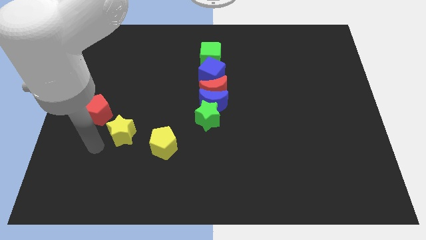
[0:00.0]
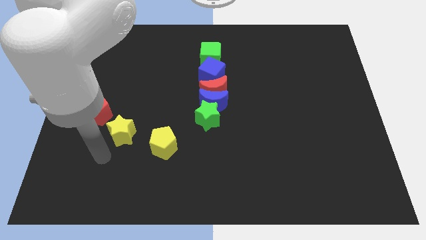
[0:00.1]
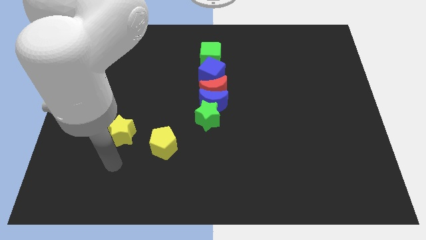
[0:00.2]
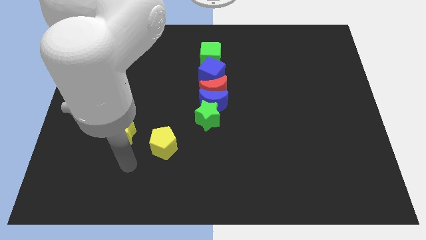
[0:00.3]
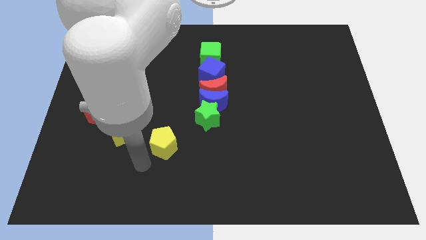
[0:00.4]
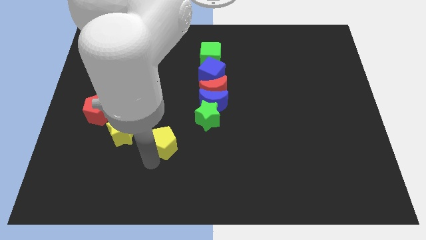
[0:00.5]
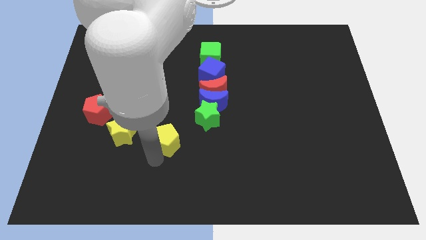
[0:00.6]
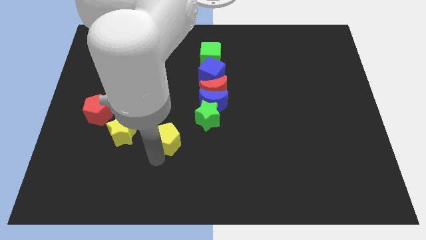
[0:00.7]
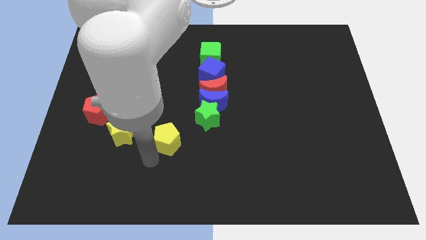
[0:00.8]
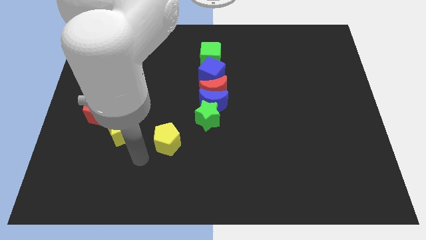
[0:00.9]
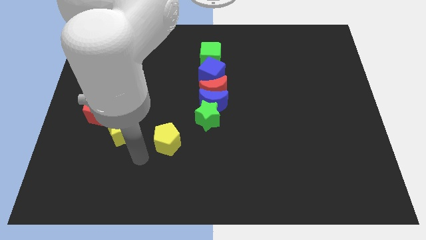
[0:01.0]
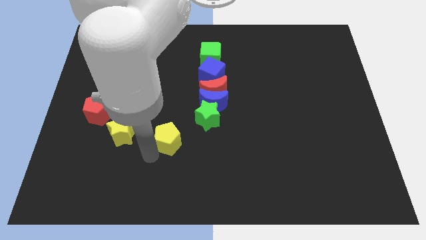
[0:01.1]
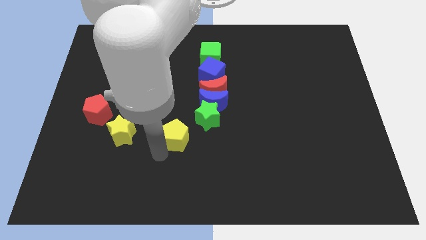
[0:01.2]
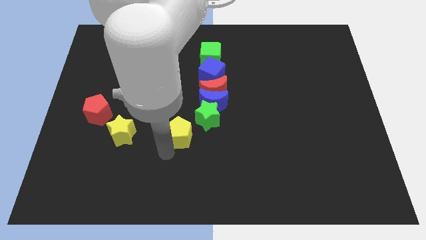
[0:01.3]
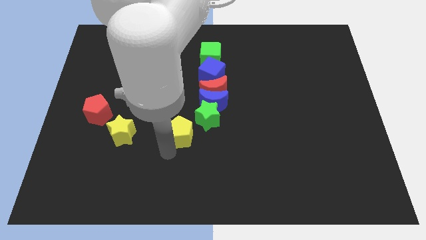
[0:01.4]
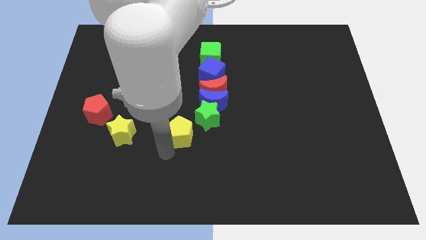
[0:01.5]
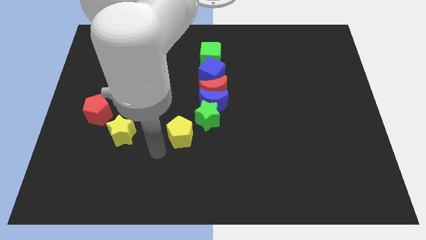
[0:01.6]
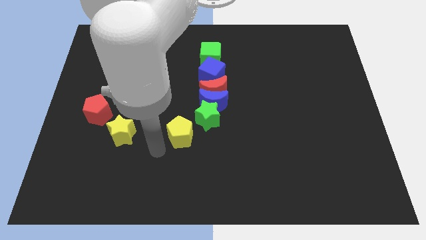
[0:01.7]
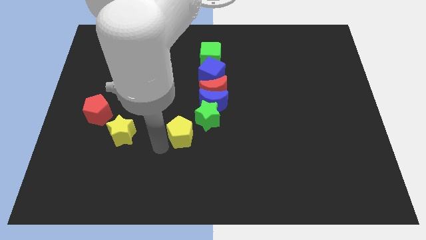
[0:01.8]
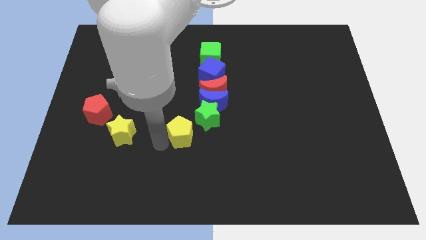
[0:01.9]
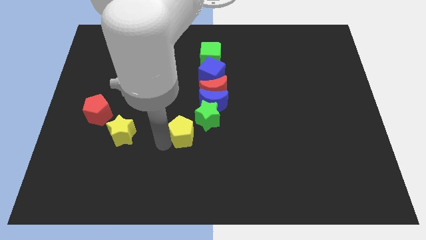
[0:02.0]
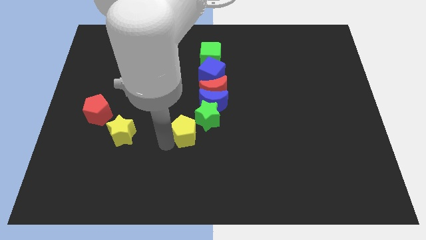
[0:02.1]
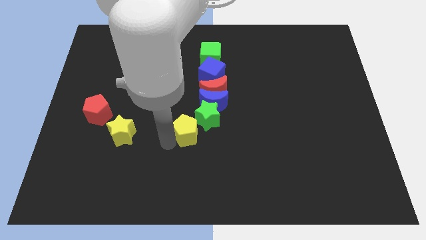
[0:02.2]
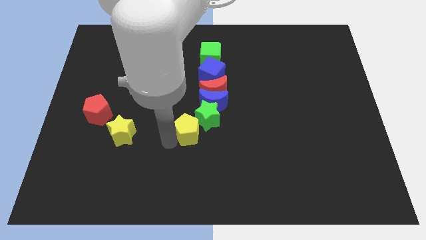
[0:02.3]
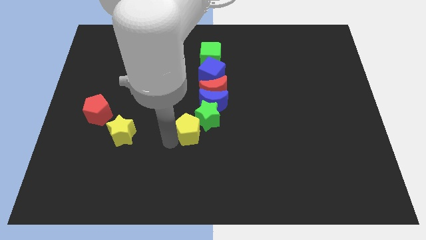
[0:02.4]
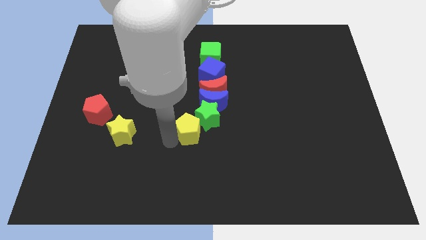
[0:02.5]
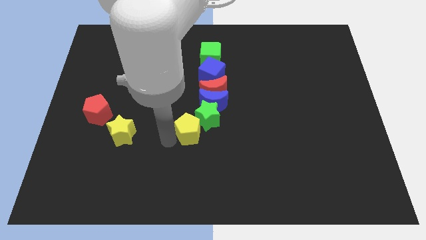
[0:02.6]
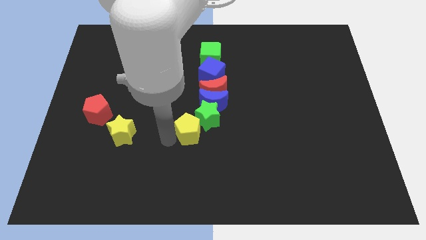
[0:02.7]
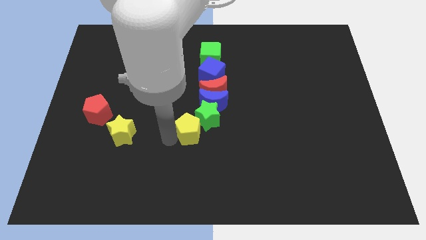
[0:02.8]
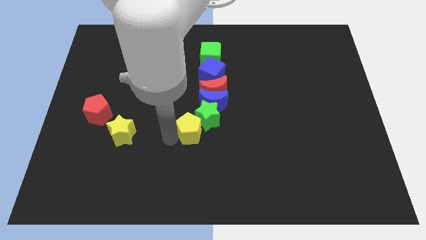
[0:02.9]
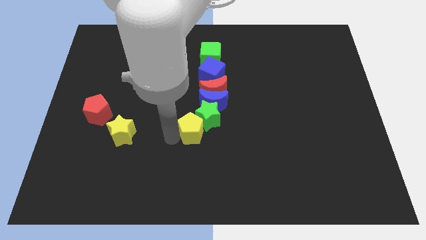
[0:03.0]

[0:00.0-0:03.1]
push the yellow pentagon to the bottom left of the green star

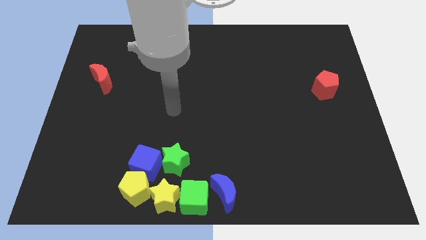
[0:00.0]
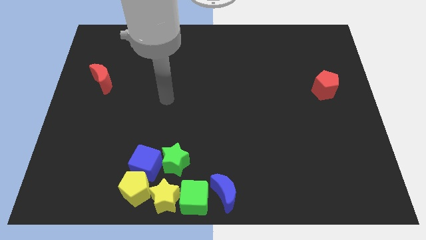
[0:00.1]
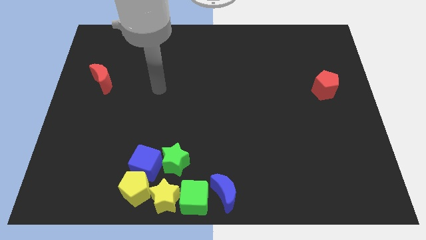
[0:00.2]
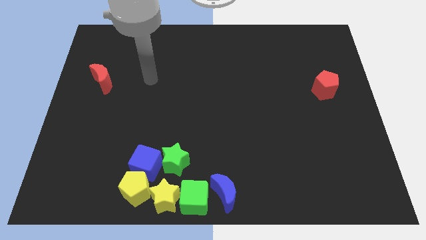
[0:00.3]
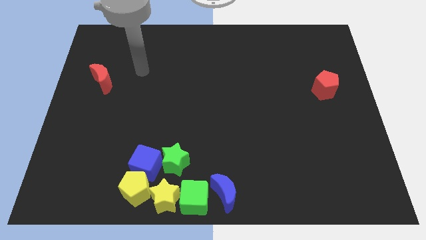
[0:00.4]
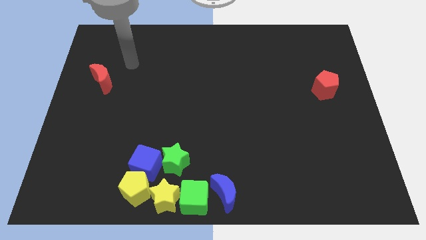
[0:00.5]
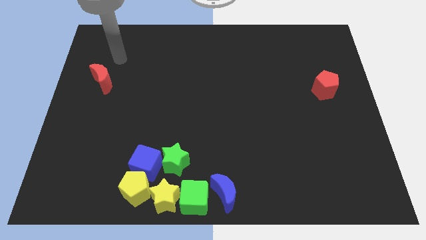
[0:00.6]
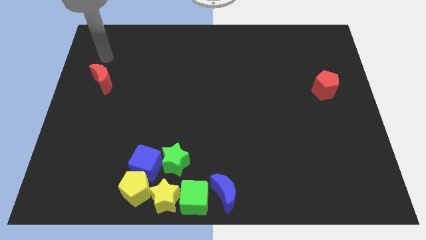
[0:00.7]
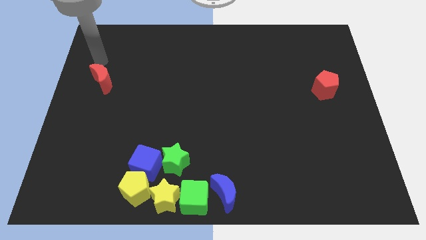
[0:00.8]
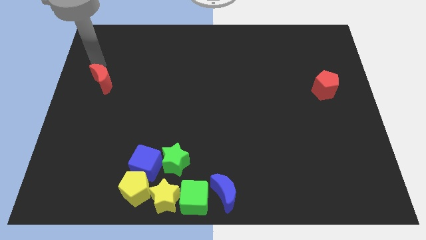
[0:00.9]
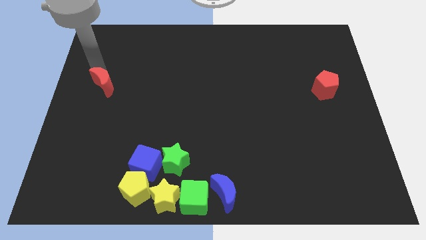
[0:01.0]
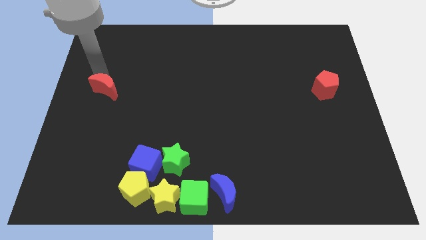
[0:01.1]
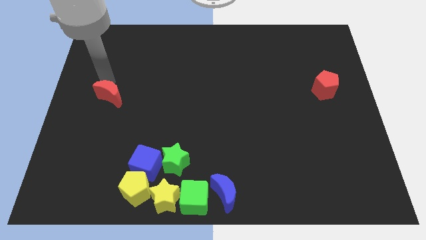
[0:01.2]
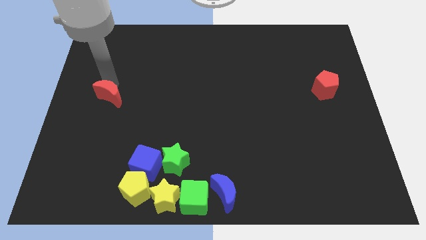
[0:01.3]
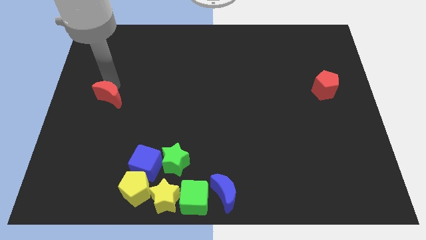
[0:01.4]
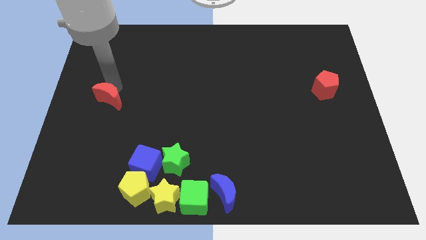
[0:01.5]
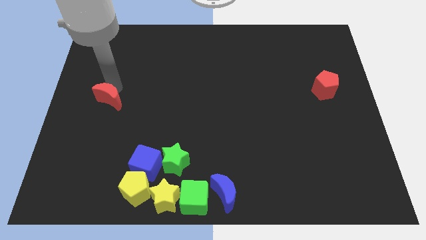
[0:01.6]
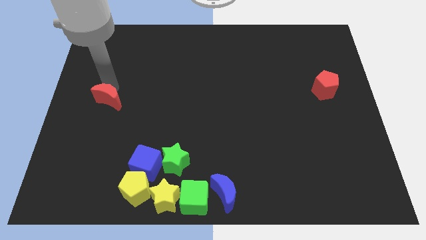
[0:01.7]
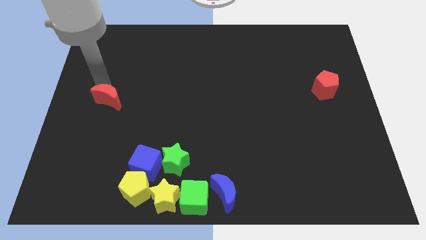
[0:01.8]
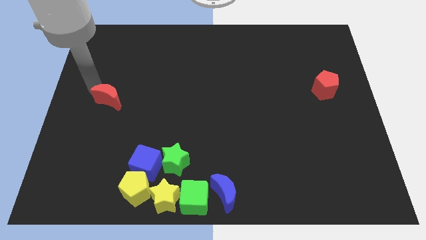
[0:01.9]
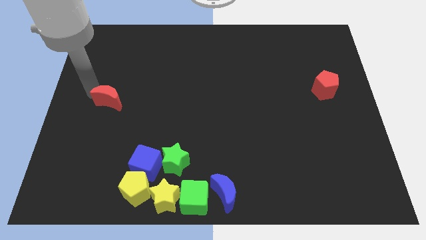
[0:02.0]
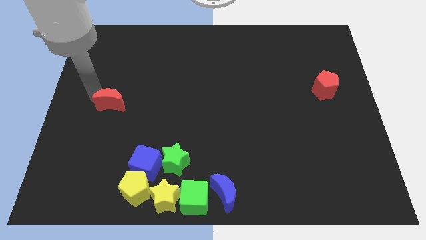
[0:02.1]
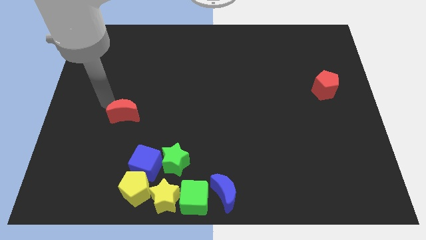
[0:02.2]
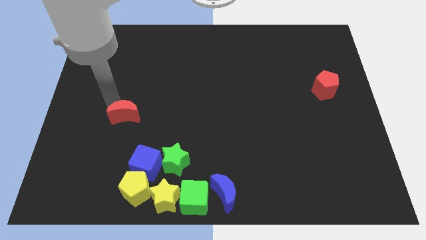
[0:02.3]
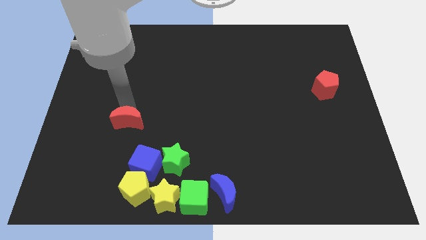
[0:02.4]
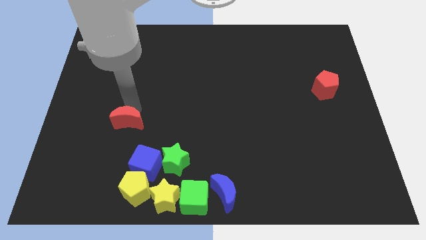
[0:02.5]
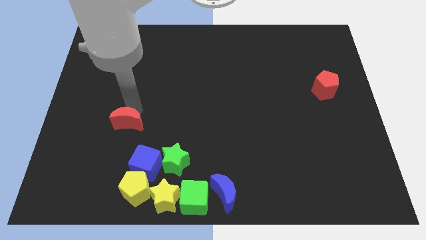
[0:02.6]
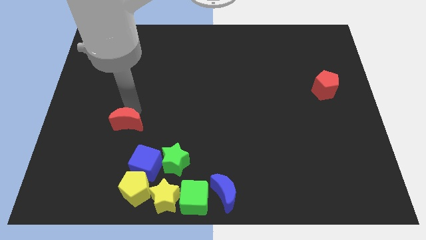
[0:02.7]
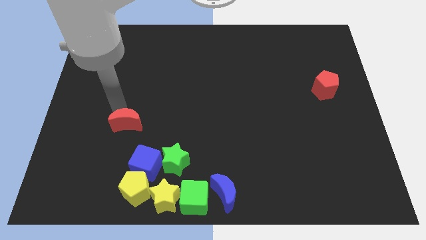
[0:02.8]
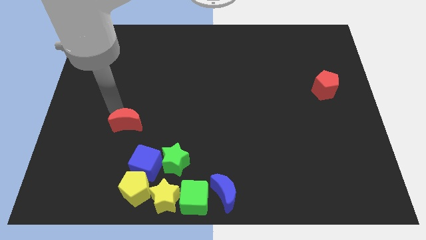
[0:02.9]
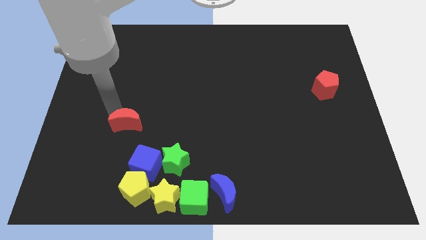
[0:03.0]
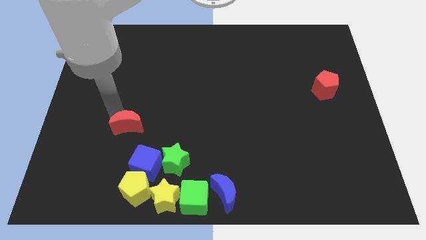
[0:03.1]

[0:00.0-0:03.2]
slide the red moon close to the group of blocks

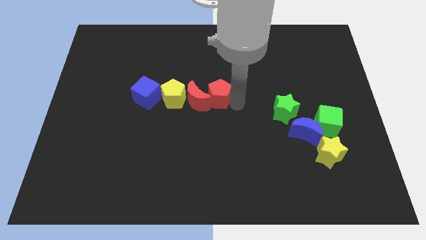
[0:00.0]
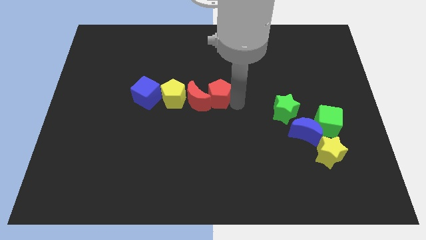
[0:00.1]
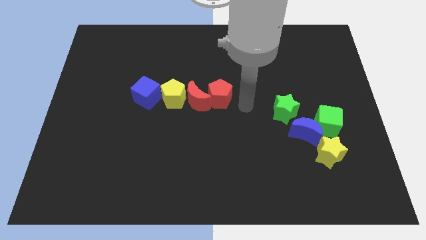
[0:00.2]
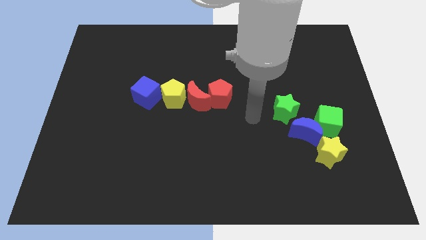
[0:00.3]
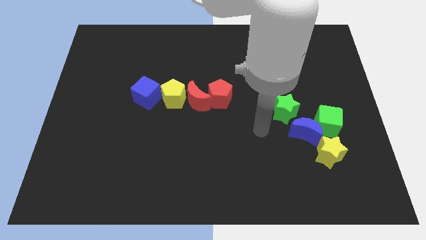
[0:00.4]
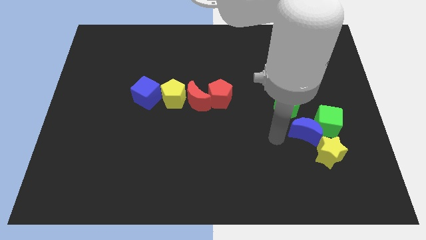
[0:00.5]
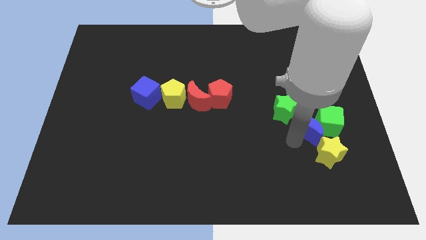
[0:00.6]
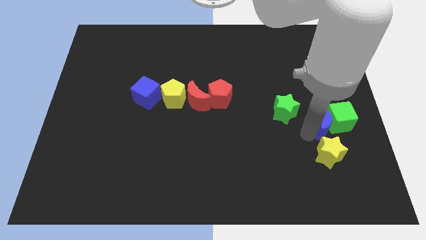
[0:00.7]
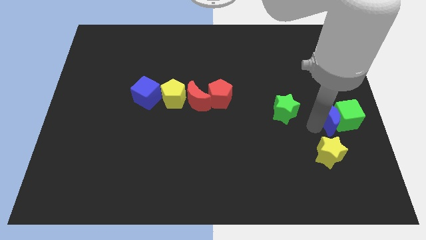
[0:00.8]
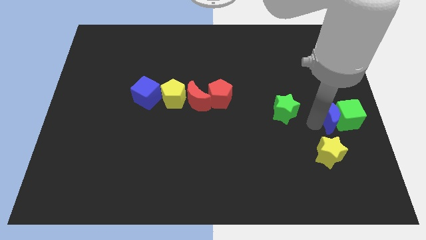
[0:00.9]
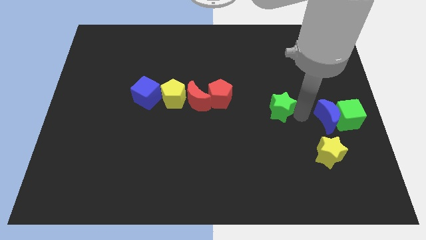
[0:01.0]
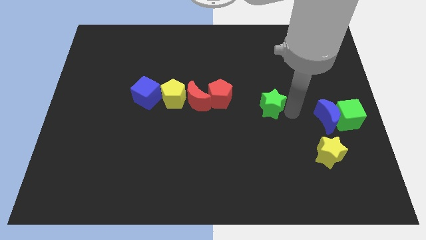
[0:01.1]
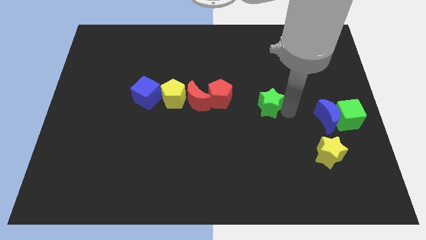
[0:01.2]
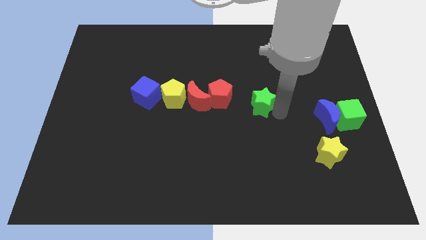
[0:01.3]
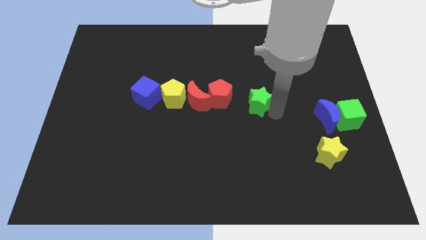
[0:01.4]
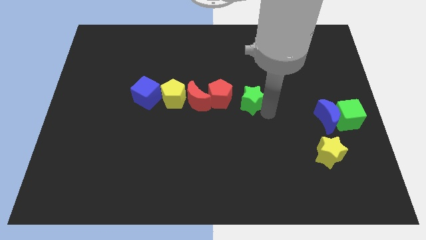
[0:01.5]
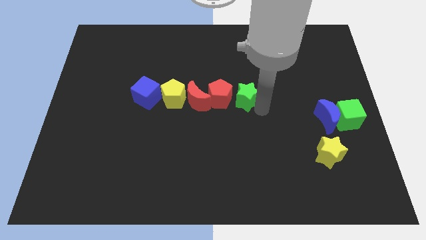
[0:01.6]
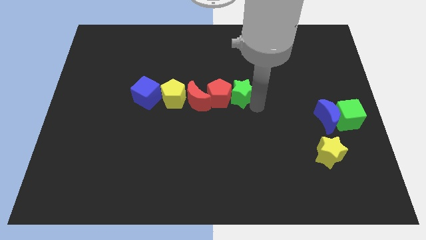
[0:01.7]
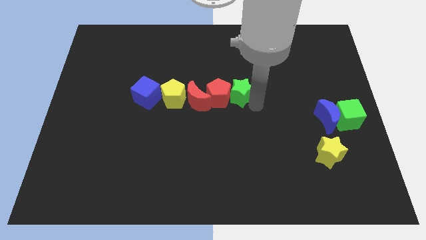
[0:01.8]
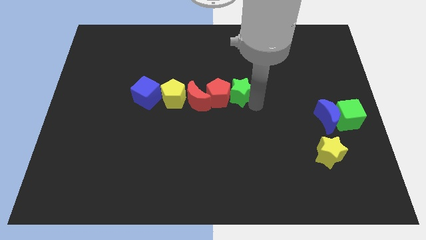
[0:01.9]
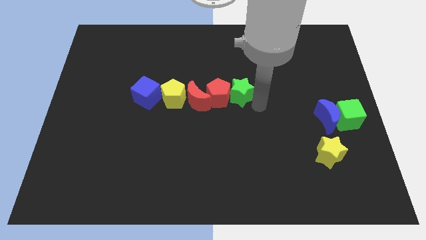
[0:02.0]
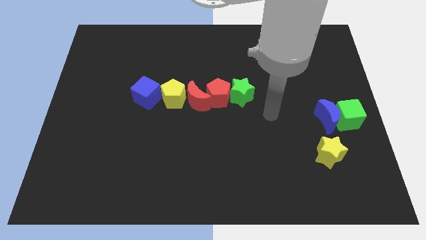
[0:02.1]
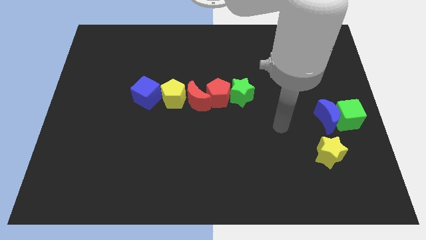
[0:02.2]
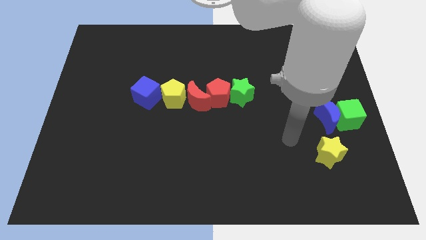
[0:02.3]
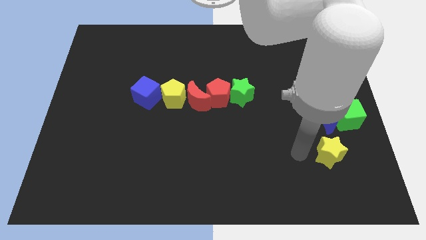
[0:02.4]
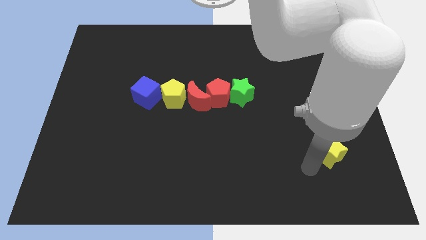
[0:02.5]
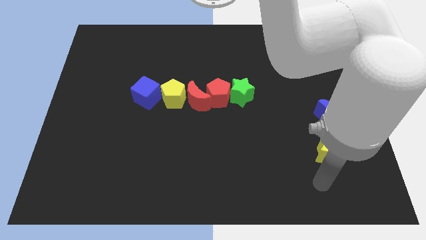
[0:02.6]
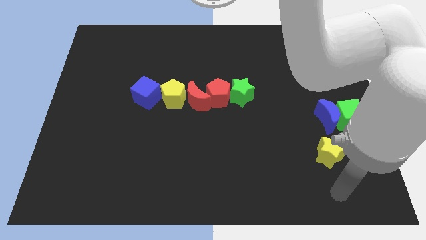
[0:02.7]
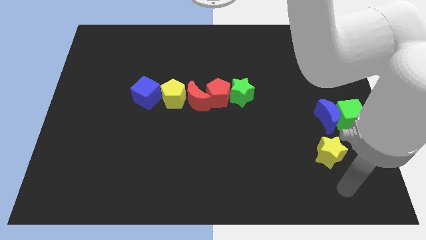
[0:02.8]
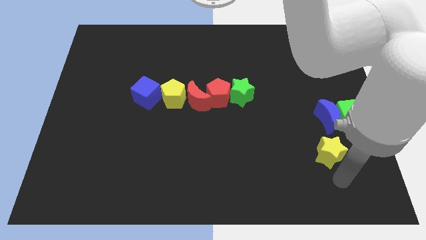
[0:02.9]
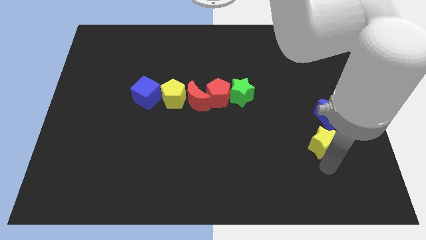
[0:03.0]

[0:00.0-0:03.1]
push the green star to the right of the red pentagon
